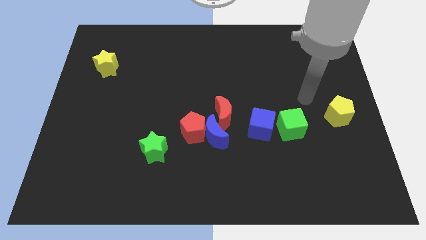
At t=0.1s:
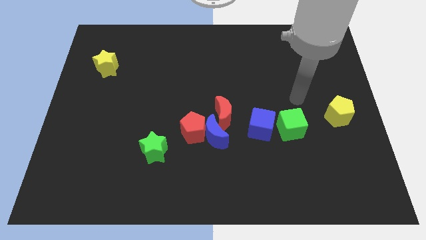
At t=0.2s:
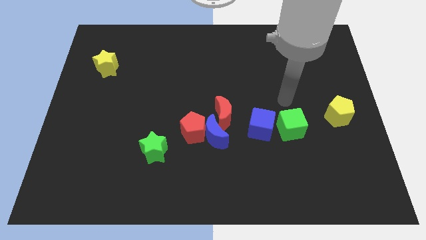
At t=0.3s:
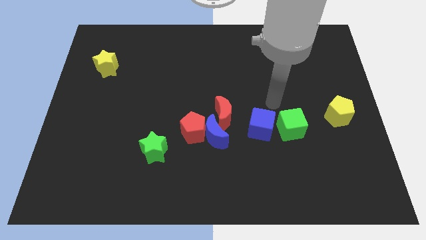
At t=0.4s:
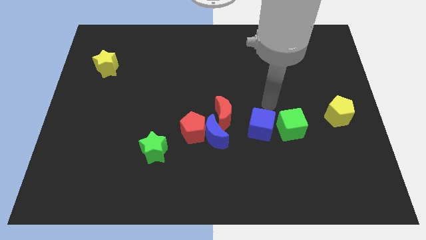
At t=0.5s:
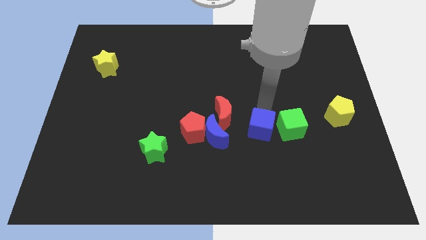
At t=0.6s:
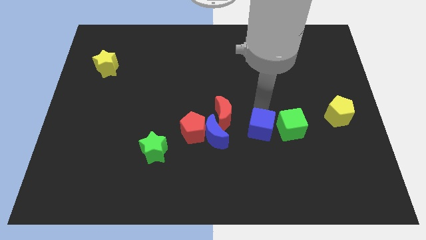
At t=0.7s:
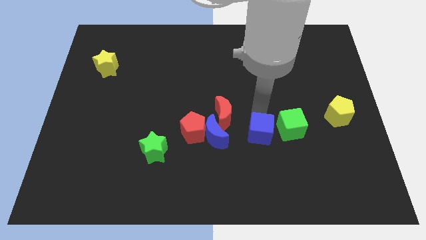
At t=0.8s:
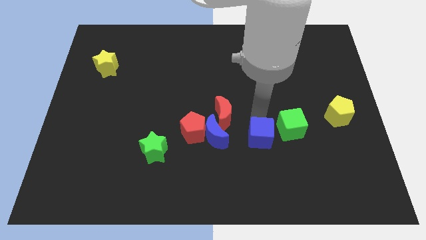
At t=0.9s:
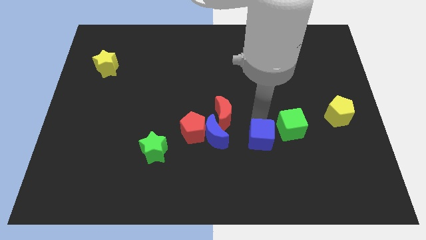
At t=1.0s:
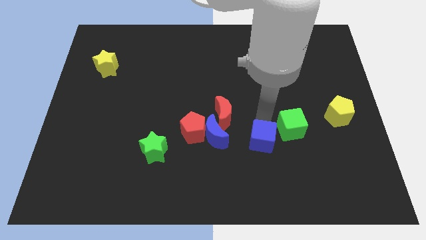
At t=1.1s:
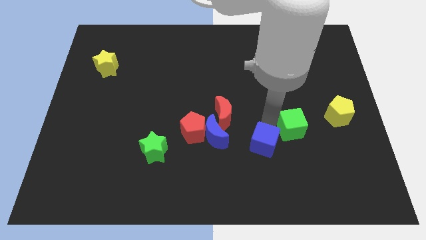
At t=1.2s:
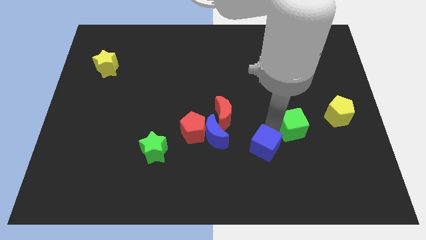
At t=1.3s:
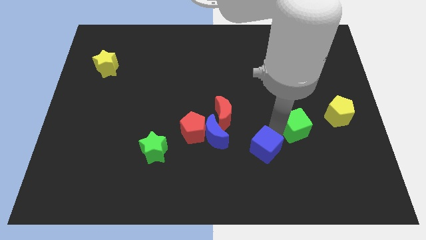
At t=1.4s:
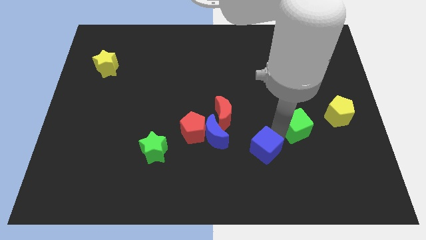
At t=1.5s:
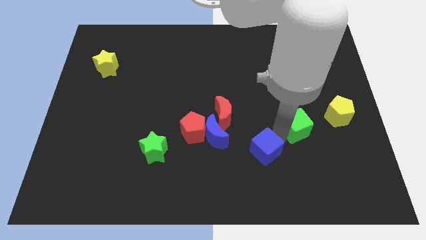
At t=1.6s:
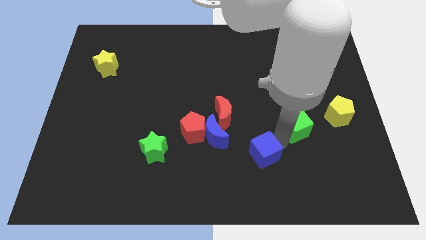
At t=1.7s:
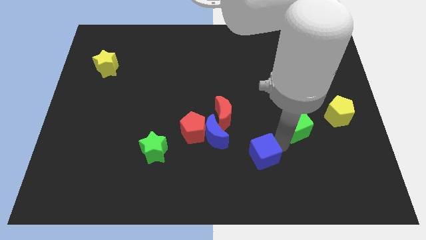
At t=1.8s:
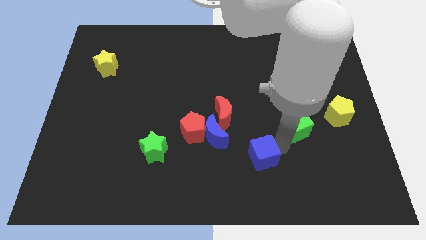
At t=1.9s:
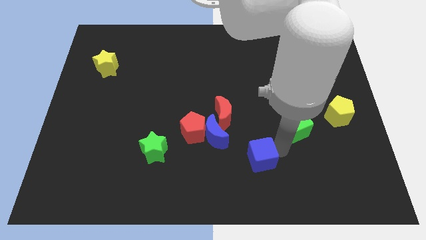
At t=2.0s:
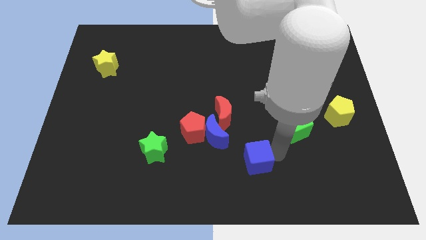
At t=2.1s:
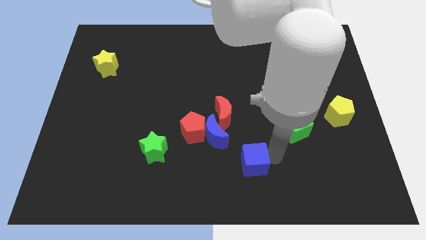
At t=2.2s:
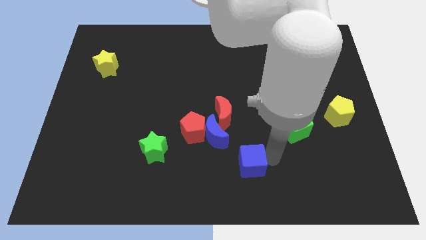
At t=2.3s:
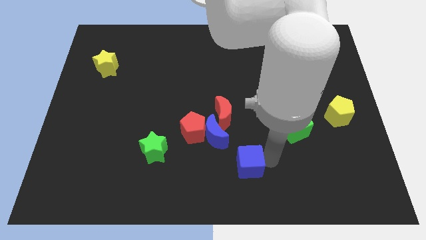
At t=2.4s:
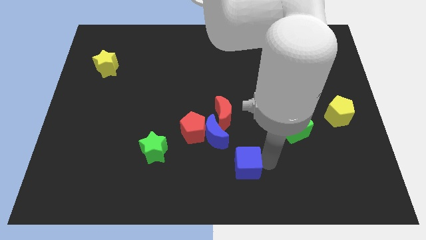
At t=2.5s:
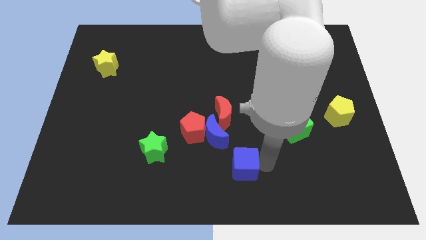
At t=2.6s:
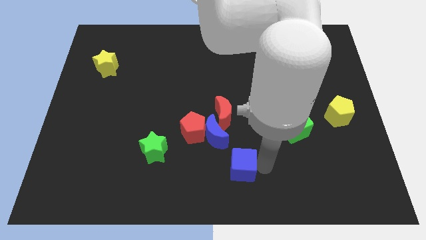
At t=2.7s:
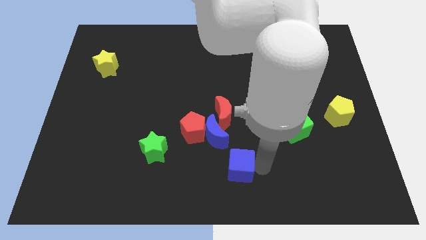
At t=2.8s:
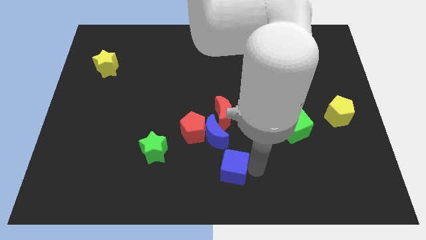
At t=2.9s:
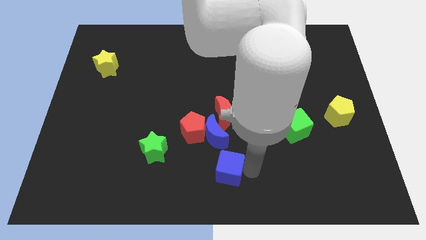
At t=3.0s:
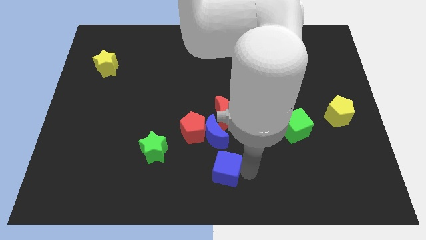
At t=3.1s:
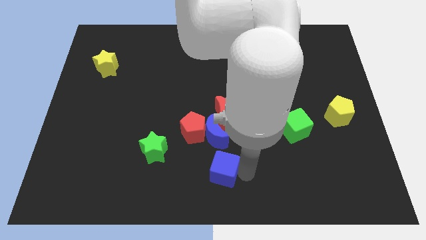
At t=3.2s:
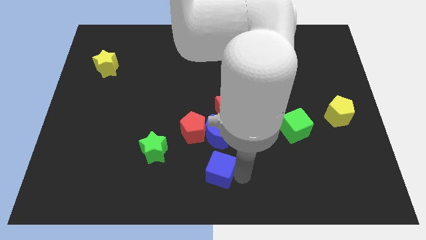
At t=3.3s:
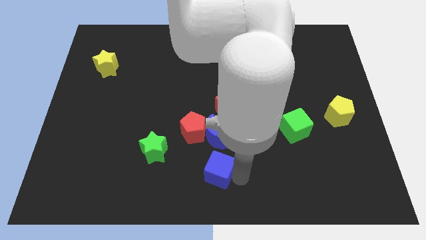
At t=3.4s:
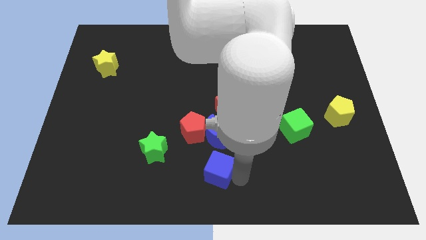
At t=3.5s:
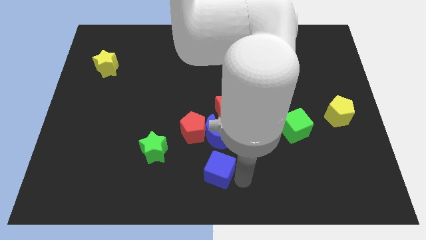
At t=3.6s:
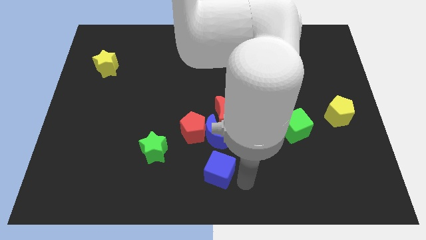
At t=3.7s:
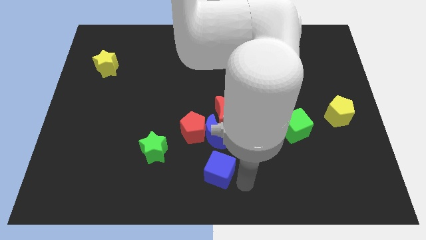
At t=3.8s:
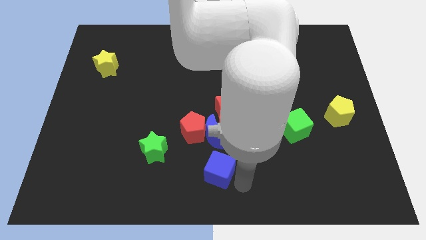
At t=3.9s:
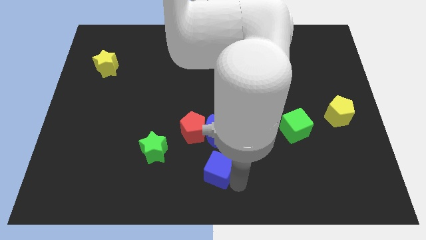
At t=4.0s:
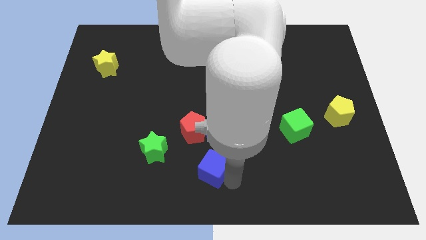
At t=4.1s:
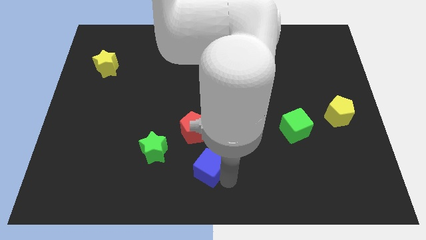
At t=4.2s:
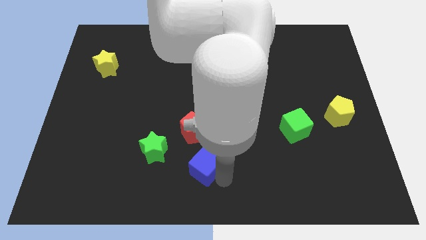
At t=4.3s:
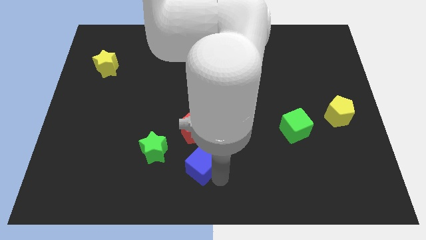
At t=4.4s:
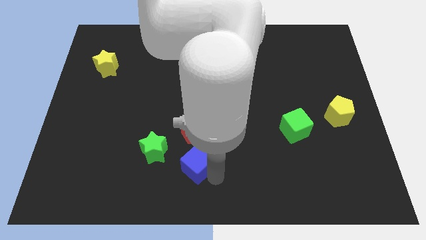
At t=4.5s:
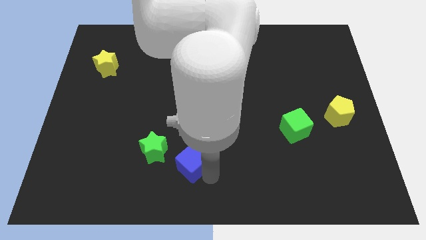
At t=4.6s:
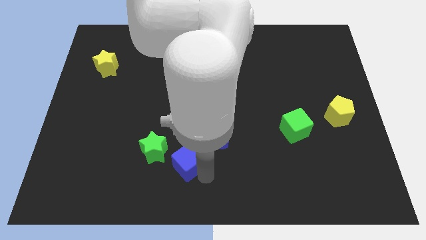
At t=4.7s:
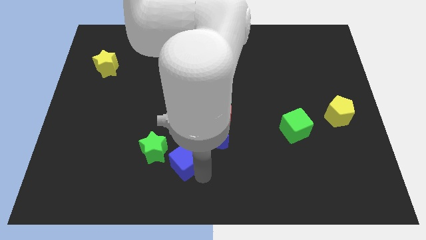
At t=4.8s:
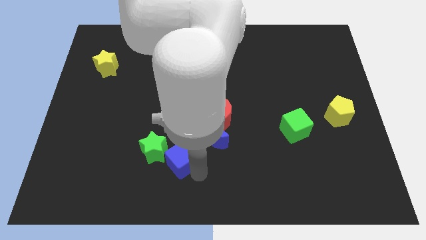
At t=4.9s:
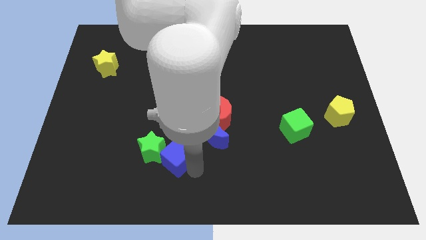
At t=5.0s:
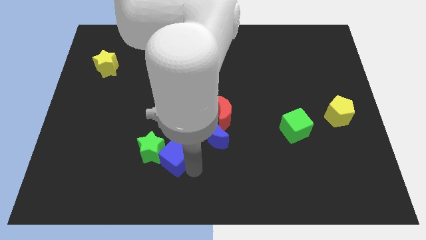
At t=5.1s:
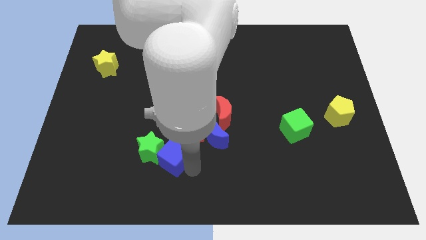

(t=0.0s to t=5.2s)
put the blue cube towards the green star

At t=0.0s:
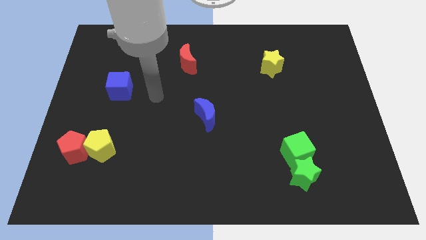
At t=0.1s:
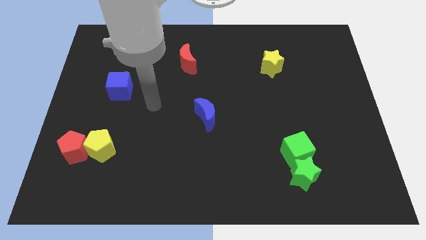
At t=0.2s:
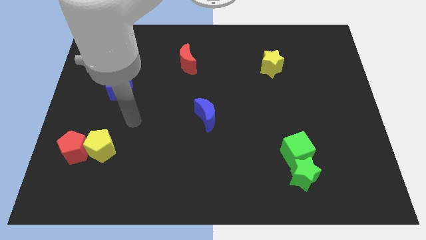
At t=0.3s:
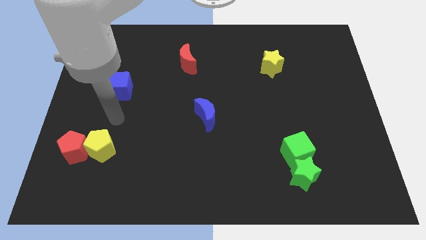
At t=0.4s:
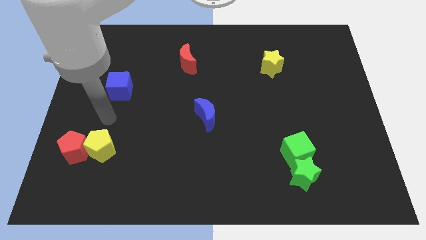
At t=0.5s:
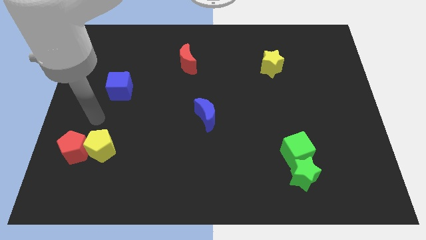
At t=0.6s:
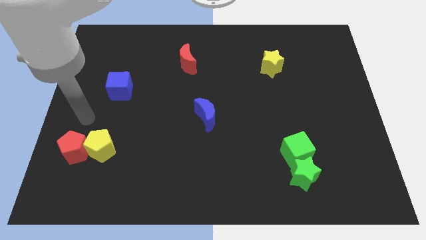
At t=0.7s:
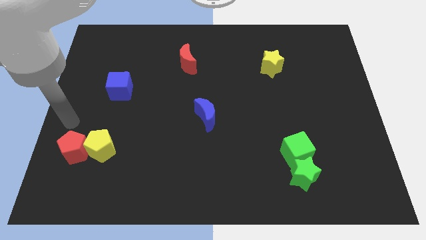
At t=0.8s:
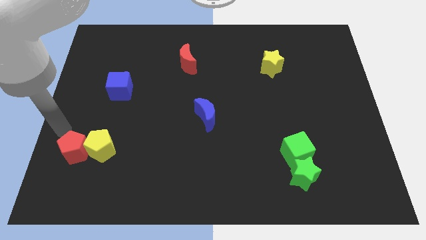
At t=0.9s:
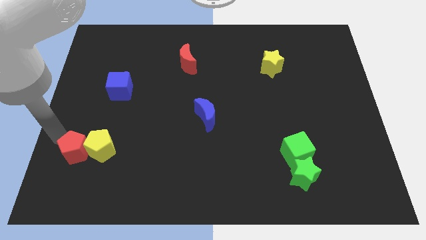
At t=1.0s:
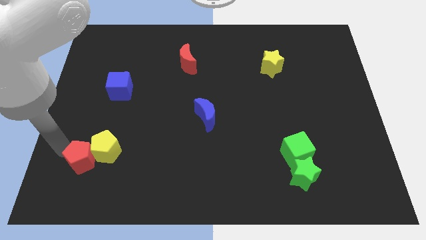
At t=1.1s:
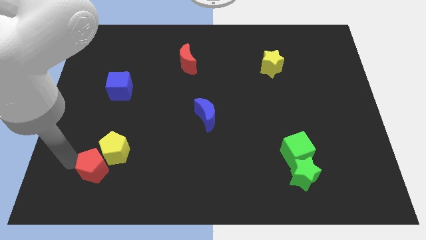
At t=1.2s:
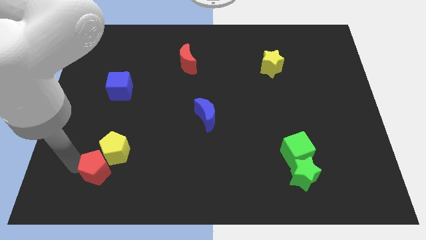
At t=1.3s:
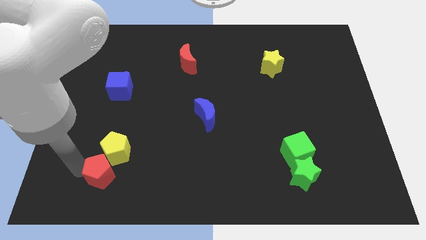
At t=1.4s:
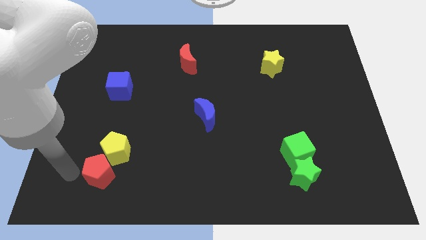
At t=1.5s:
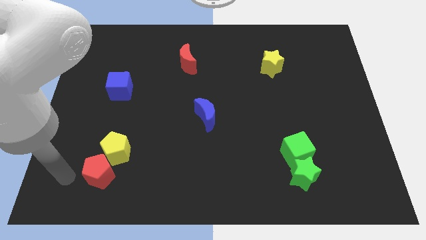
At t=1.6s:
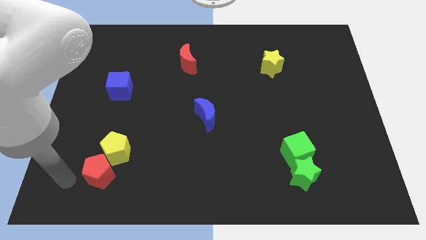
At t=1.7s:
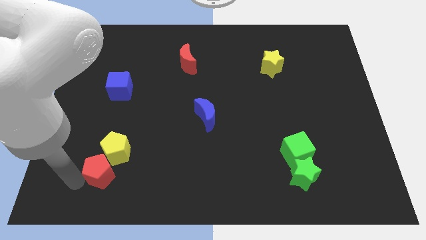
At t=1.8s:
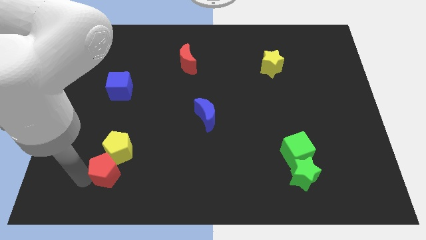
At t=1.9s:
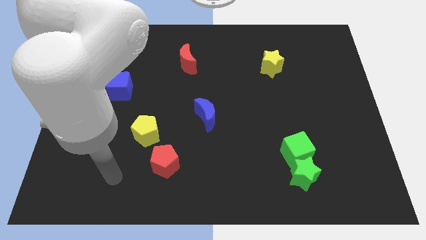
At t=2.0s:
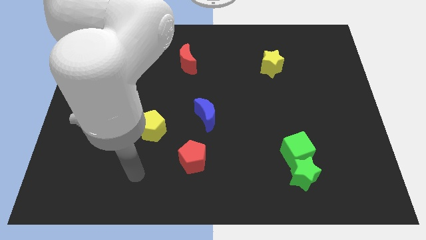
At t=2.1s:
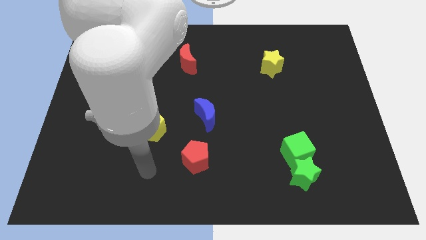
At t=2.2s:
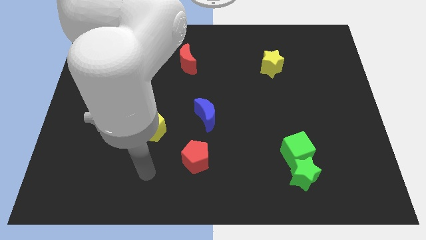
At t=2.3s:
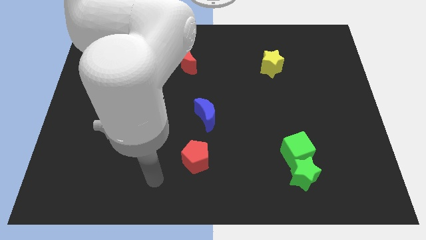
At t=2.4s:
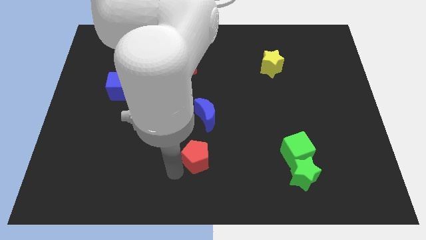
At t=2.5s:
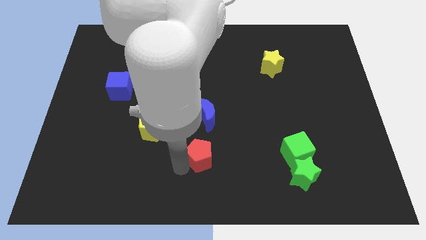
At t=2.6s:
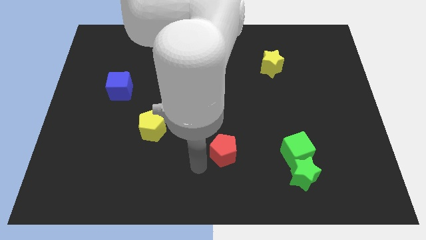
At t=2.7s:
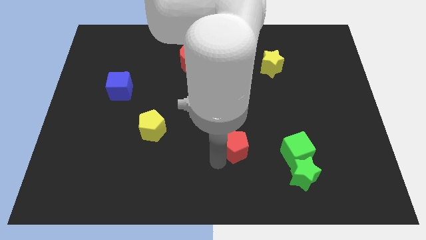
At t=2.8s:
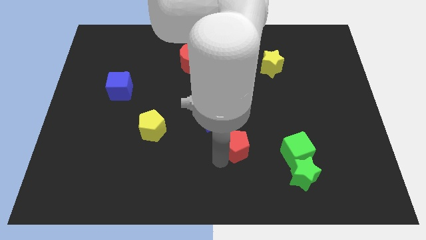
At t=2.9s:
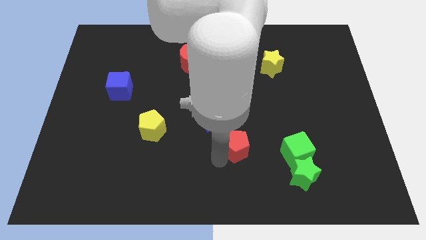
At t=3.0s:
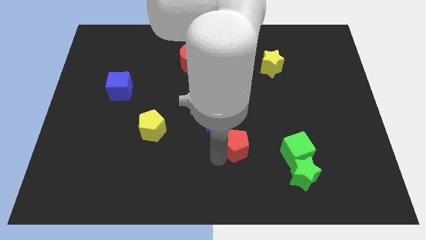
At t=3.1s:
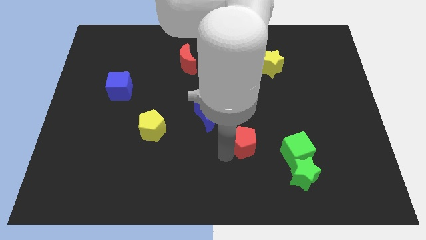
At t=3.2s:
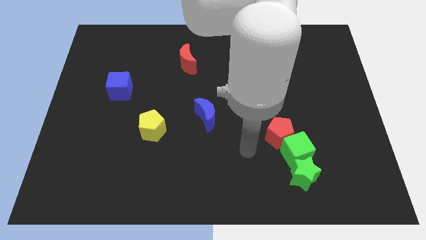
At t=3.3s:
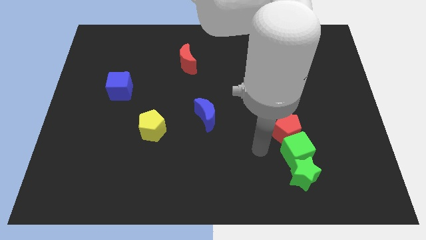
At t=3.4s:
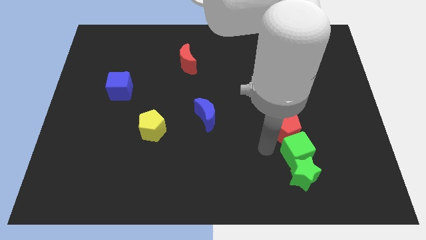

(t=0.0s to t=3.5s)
push the red pentagon to the green cube
